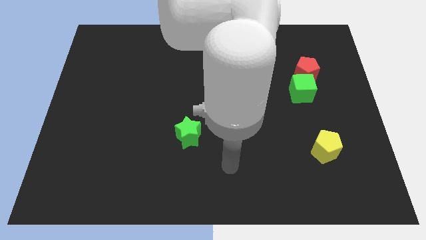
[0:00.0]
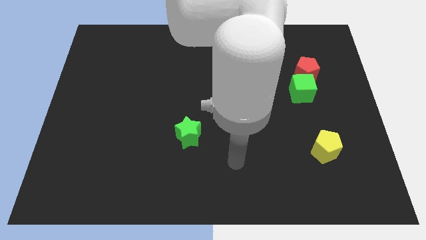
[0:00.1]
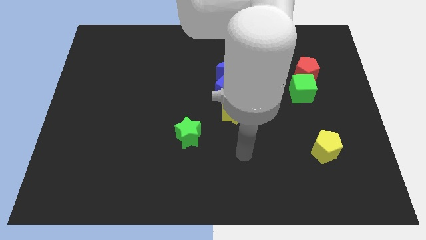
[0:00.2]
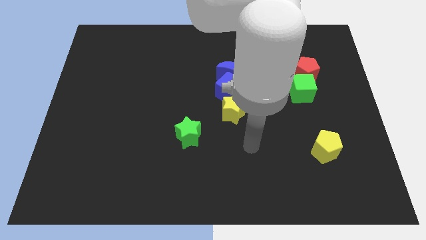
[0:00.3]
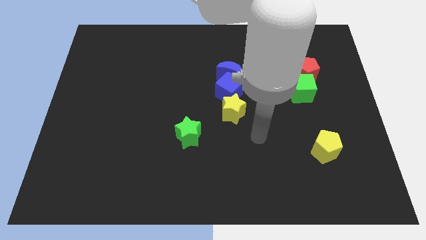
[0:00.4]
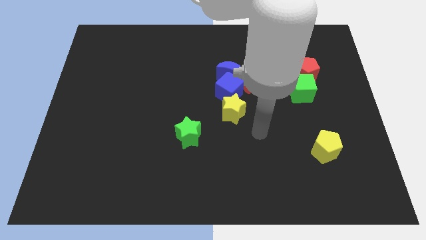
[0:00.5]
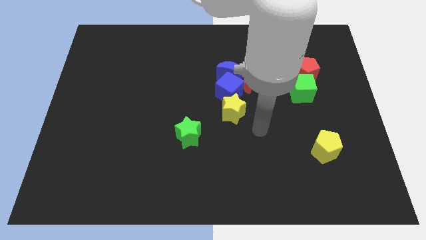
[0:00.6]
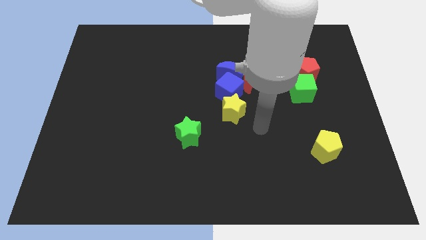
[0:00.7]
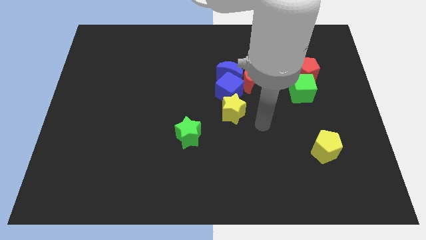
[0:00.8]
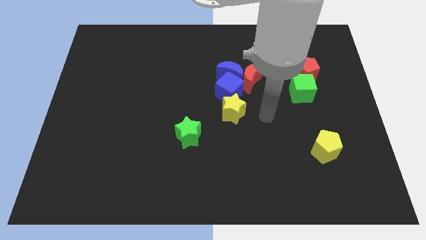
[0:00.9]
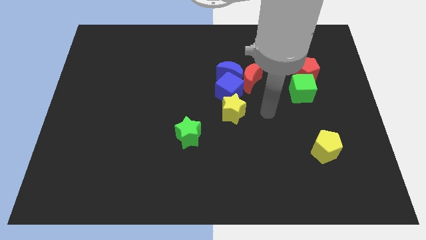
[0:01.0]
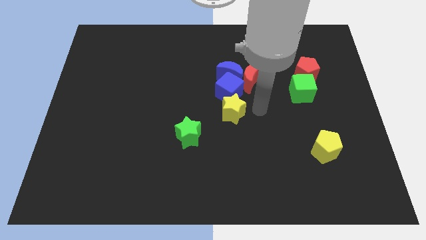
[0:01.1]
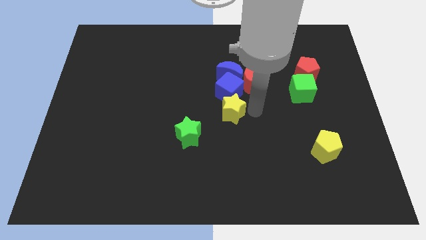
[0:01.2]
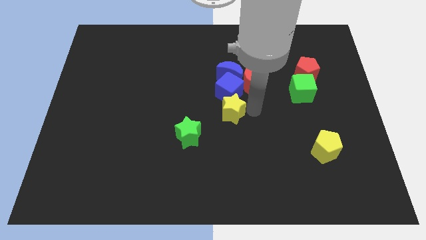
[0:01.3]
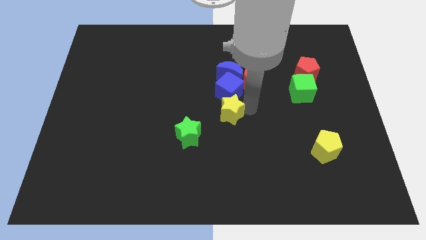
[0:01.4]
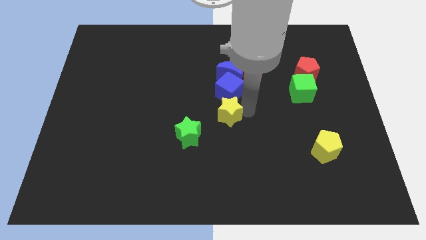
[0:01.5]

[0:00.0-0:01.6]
slightly push the yellow star below the blue cube

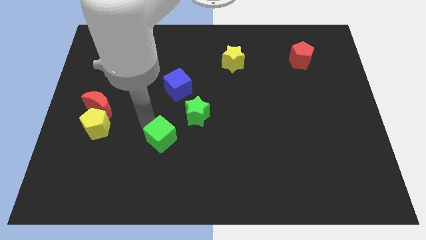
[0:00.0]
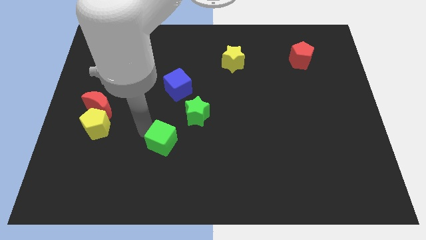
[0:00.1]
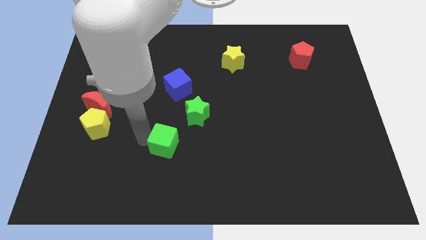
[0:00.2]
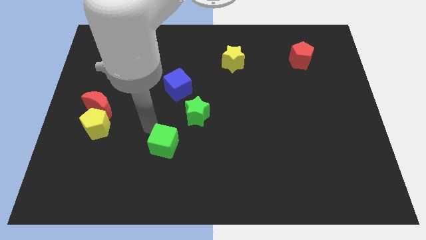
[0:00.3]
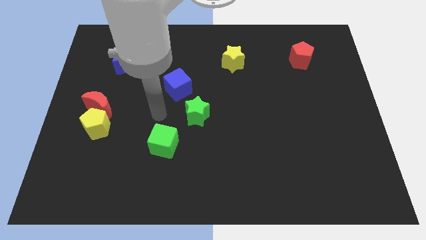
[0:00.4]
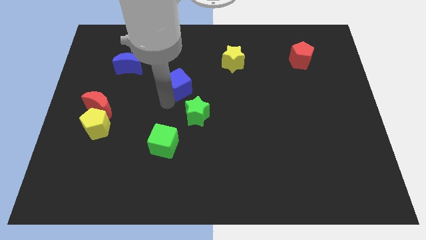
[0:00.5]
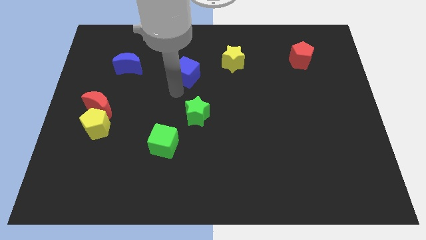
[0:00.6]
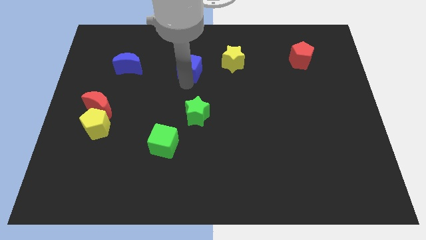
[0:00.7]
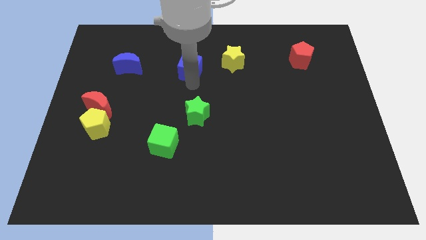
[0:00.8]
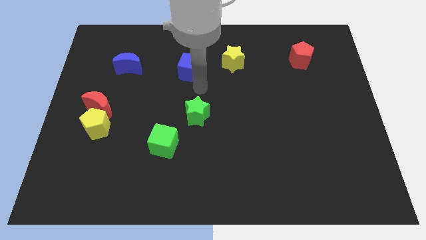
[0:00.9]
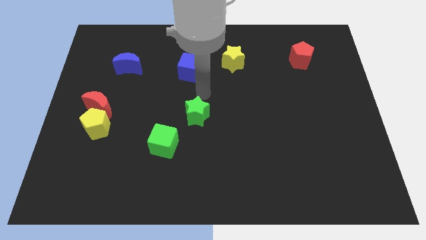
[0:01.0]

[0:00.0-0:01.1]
move the blue cube to the top of the board

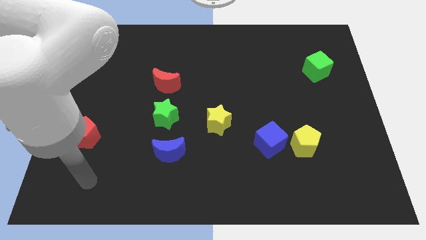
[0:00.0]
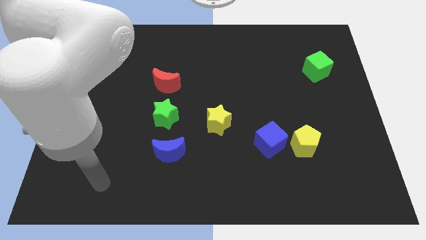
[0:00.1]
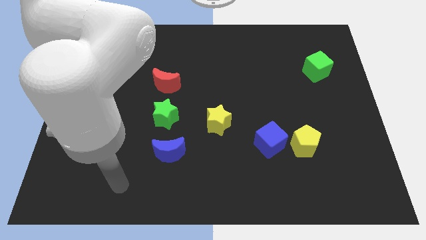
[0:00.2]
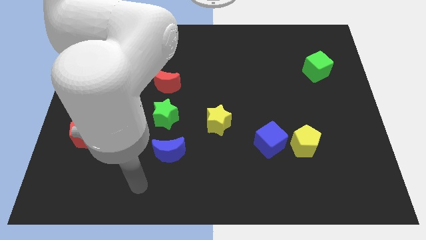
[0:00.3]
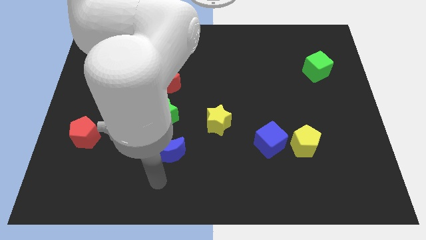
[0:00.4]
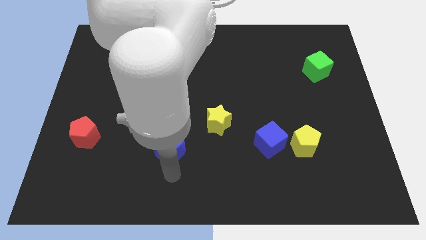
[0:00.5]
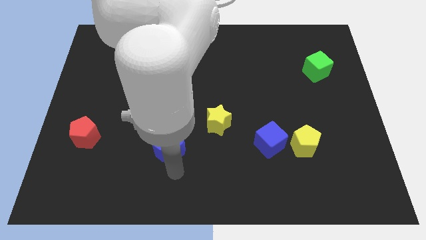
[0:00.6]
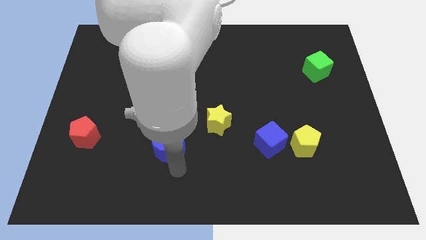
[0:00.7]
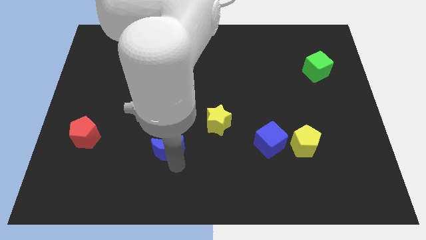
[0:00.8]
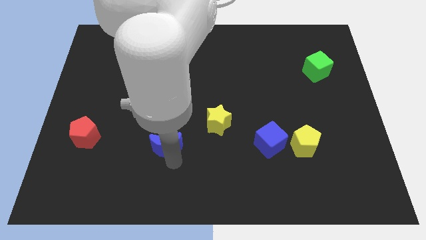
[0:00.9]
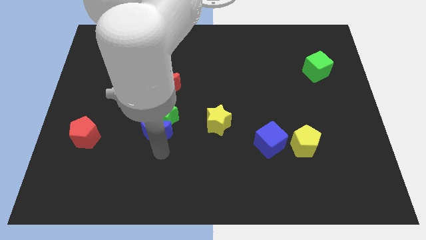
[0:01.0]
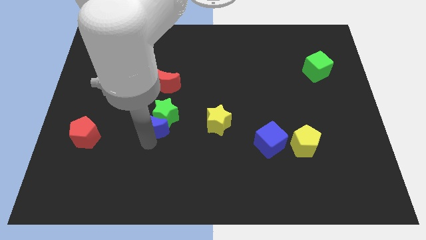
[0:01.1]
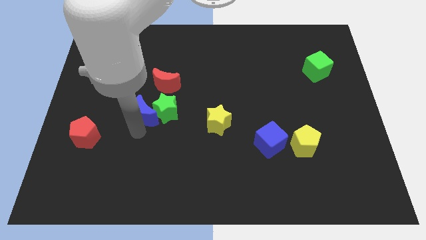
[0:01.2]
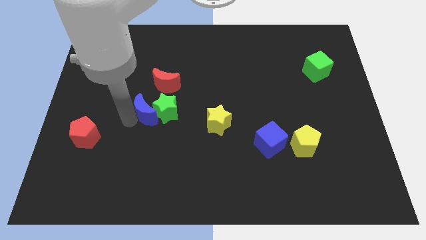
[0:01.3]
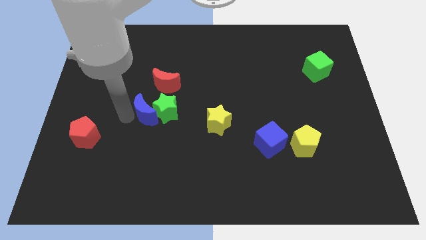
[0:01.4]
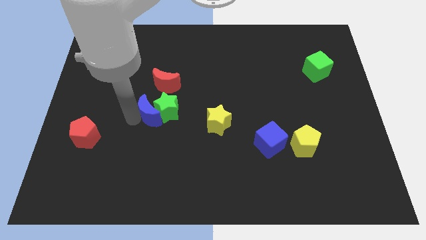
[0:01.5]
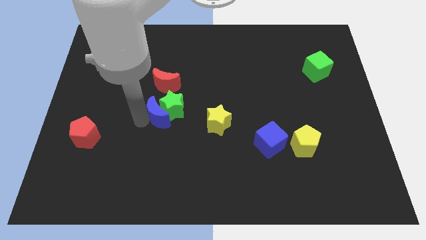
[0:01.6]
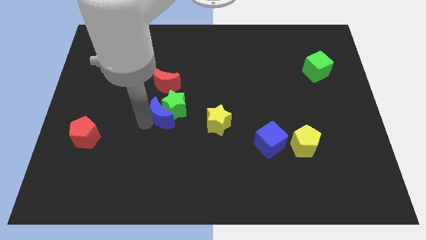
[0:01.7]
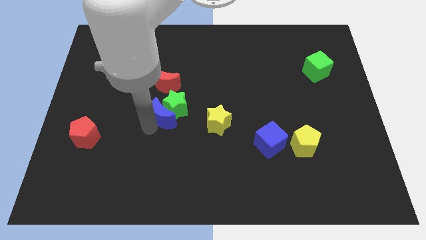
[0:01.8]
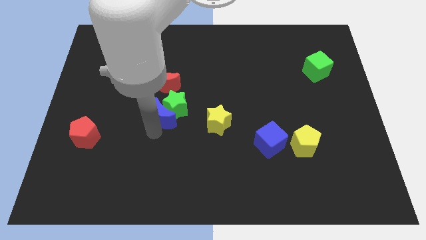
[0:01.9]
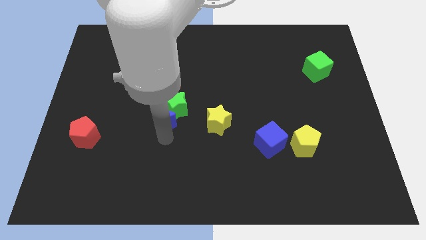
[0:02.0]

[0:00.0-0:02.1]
push the blue moon into the green star

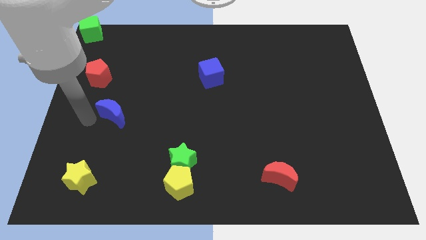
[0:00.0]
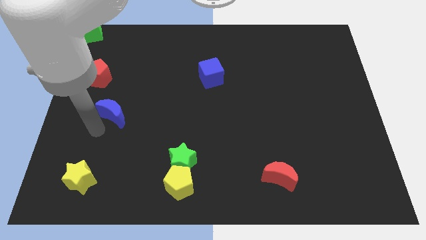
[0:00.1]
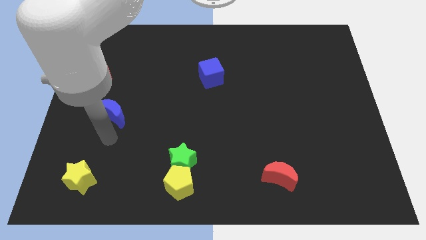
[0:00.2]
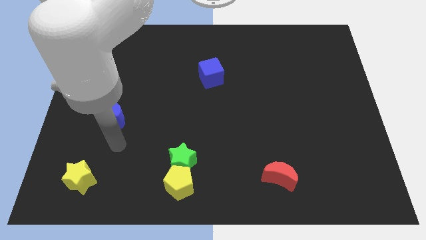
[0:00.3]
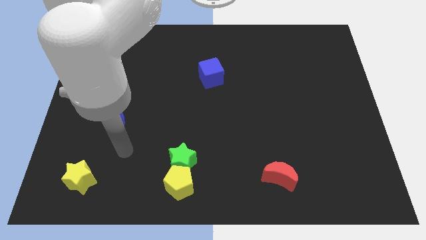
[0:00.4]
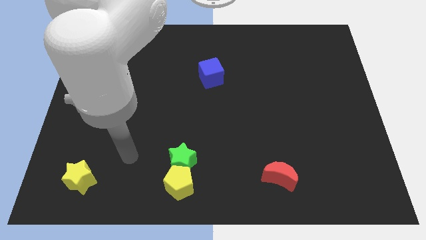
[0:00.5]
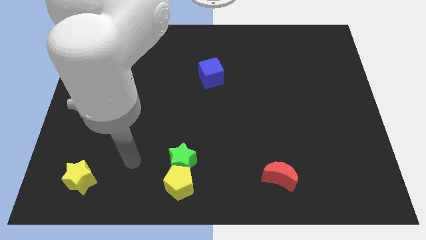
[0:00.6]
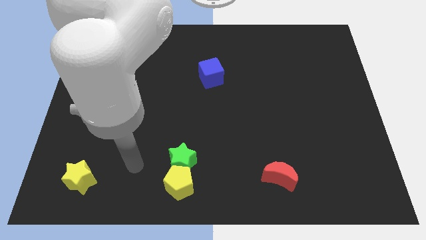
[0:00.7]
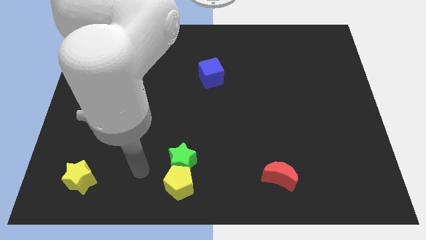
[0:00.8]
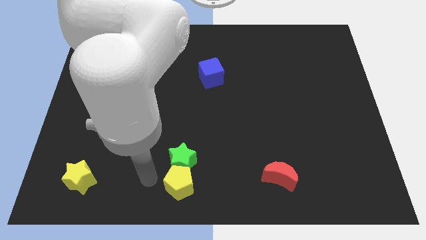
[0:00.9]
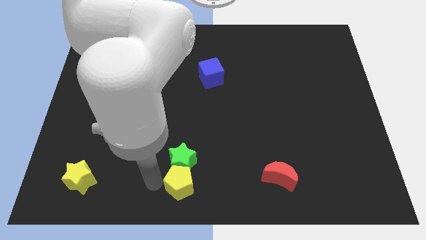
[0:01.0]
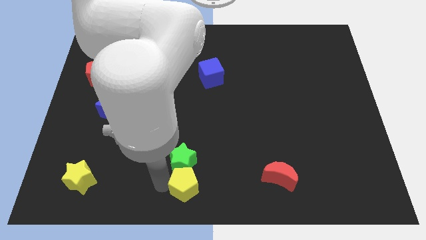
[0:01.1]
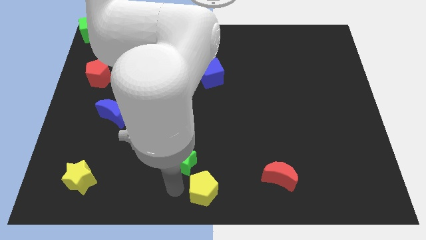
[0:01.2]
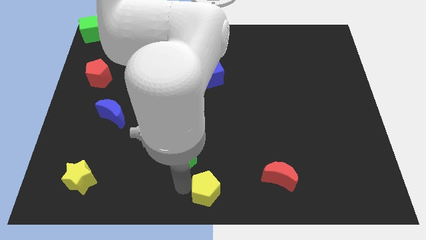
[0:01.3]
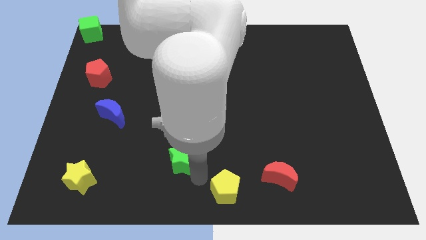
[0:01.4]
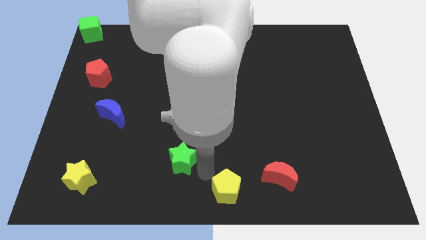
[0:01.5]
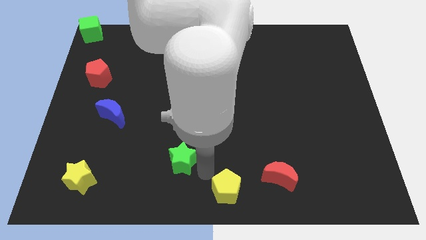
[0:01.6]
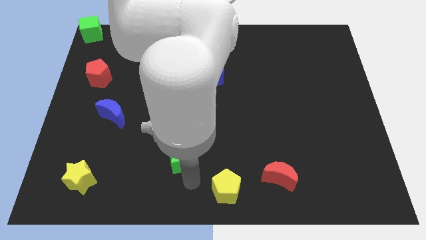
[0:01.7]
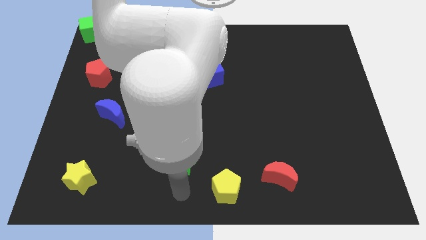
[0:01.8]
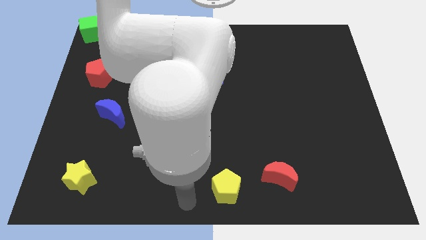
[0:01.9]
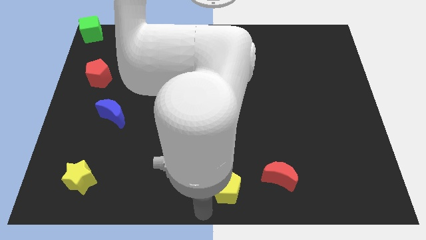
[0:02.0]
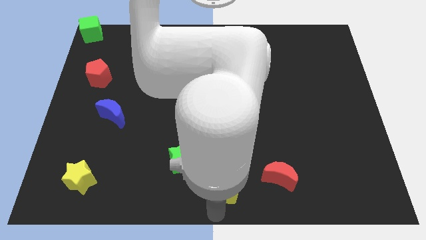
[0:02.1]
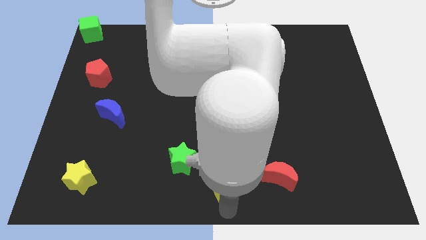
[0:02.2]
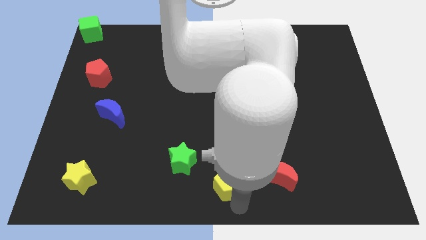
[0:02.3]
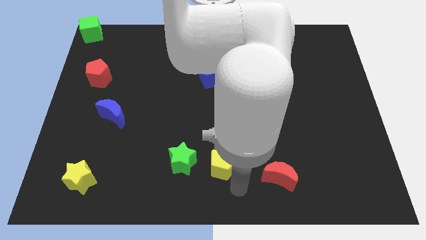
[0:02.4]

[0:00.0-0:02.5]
place the yellow pentagon in between the green star and red moon

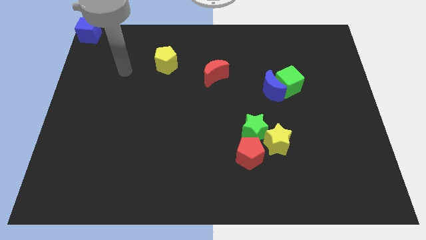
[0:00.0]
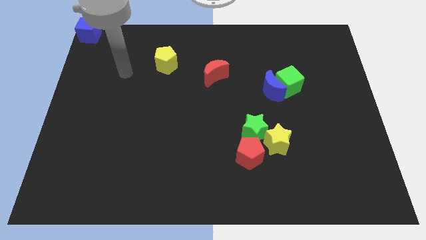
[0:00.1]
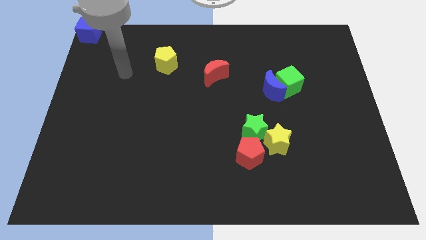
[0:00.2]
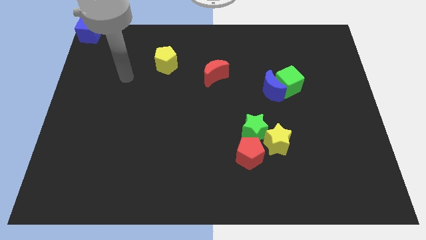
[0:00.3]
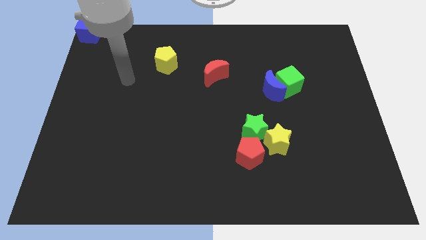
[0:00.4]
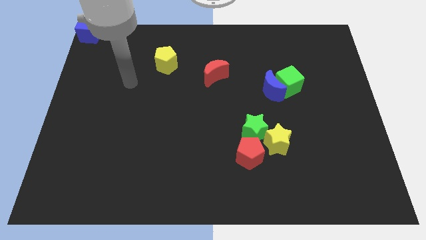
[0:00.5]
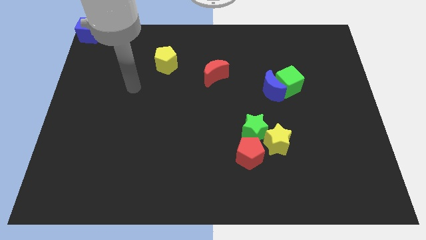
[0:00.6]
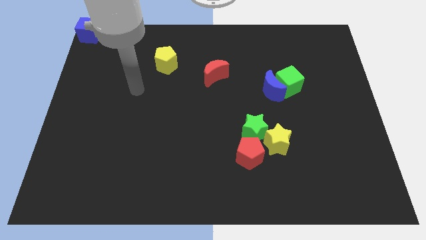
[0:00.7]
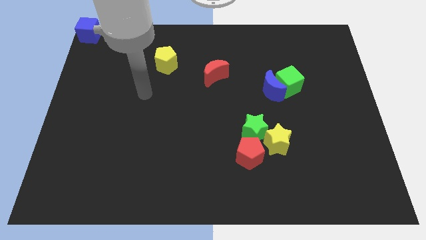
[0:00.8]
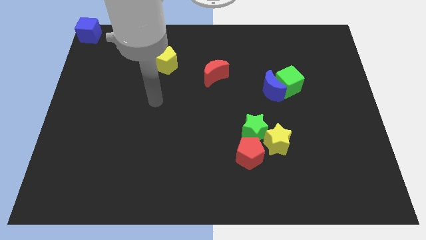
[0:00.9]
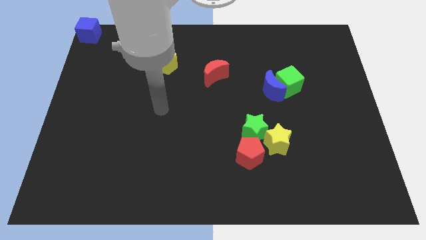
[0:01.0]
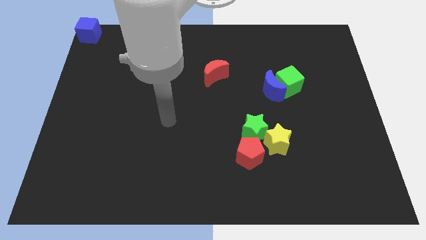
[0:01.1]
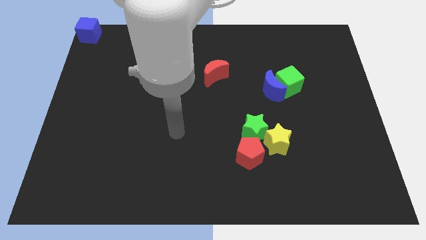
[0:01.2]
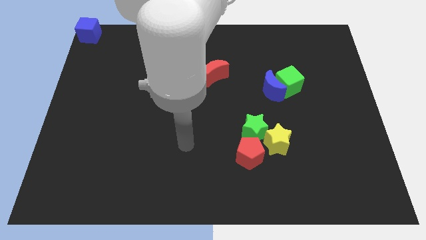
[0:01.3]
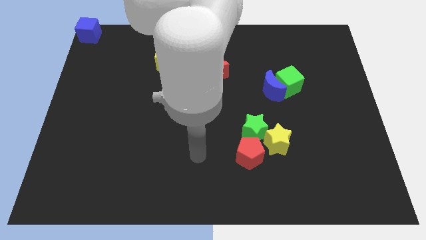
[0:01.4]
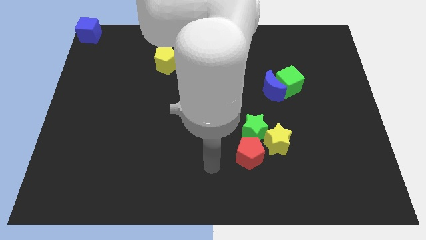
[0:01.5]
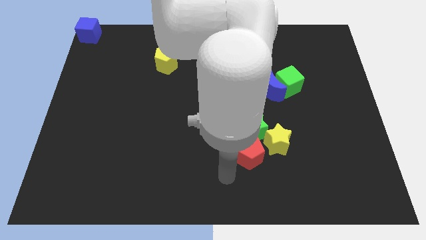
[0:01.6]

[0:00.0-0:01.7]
move your arm towards the bottom of the board
